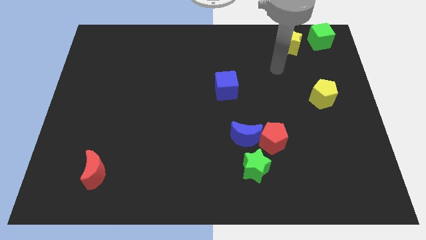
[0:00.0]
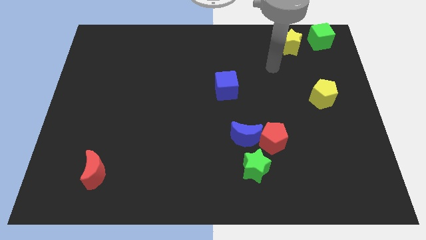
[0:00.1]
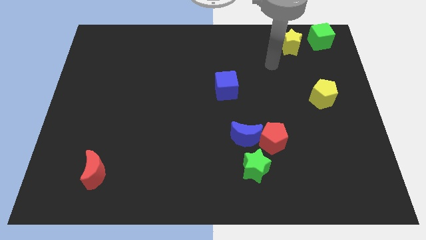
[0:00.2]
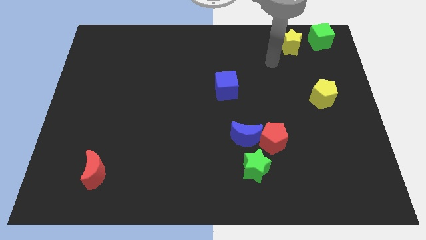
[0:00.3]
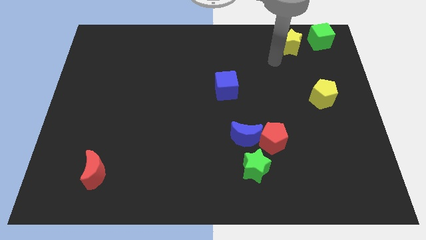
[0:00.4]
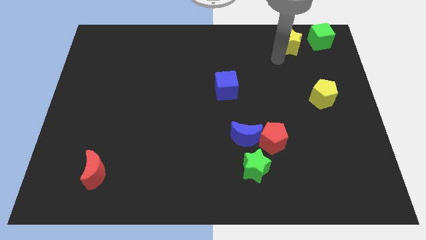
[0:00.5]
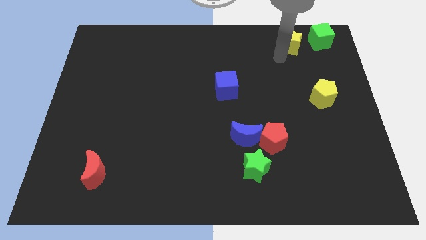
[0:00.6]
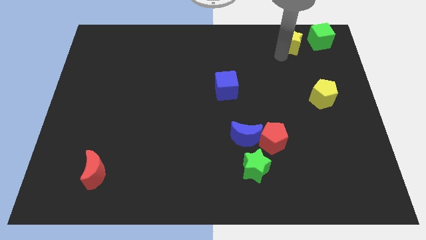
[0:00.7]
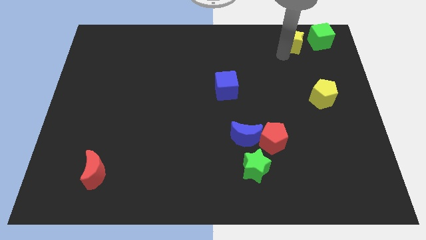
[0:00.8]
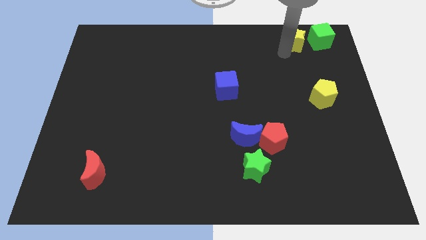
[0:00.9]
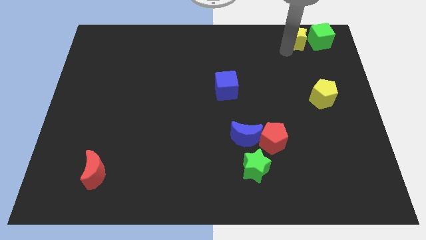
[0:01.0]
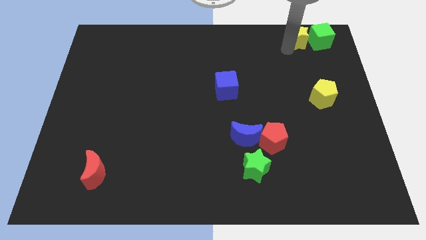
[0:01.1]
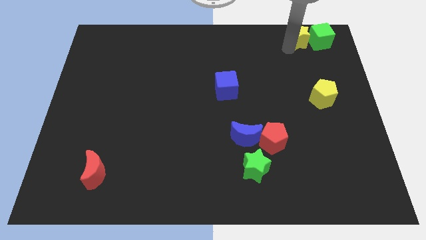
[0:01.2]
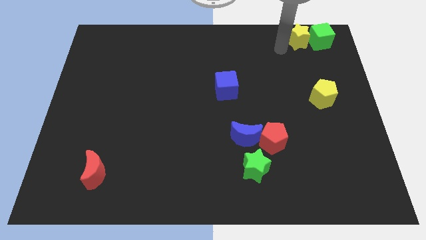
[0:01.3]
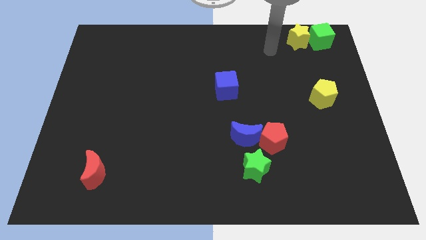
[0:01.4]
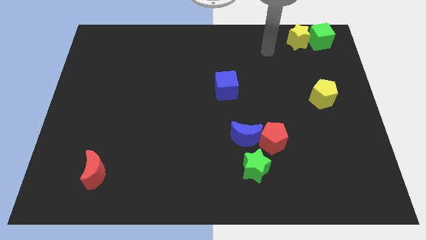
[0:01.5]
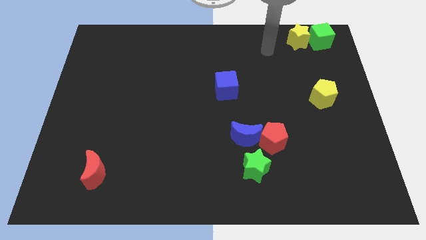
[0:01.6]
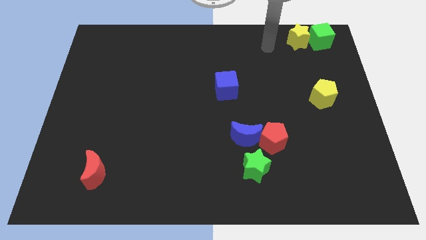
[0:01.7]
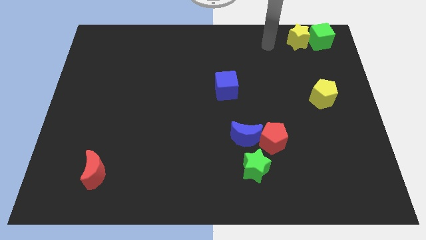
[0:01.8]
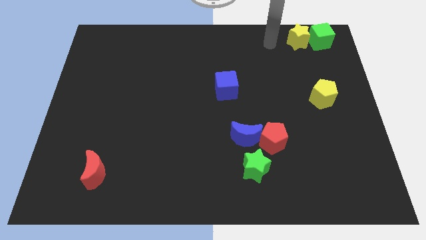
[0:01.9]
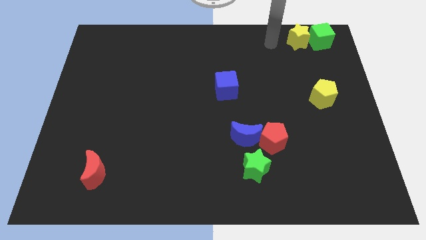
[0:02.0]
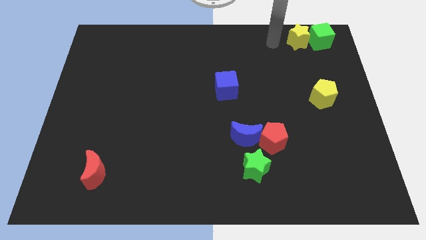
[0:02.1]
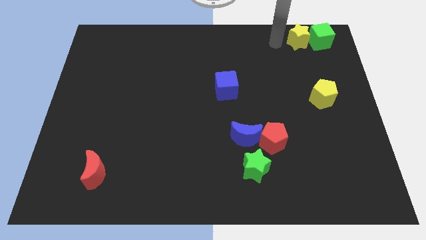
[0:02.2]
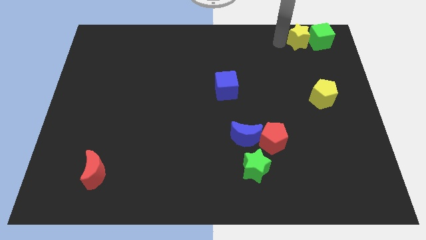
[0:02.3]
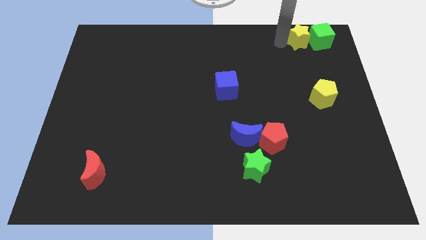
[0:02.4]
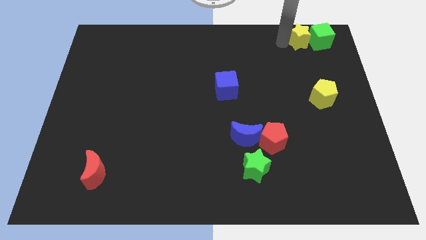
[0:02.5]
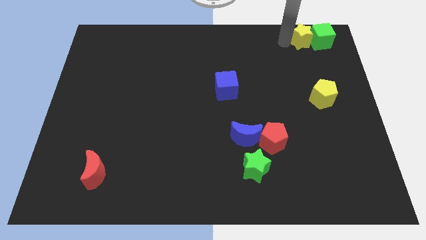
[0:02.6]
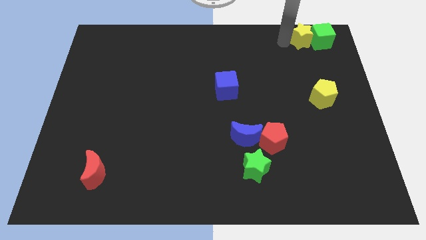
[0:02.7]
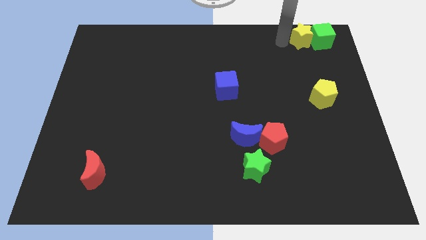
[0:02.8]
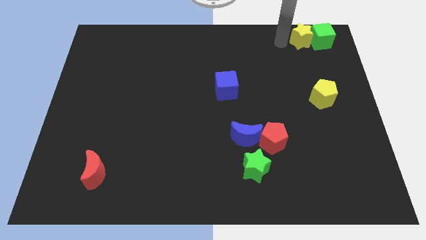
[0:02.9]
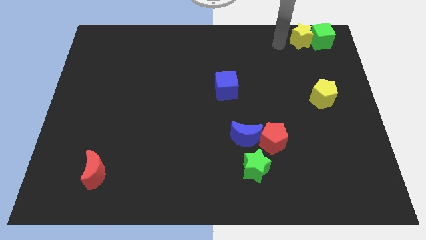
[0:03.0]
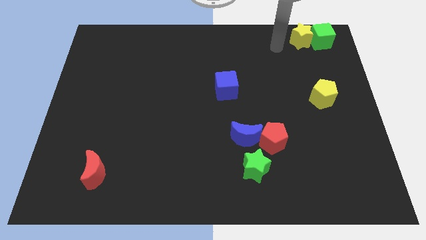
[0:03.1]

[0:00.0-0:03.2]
push yellow star into the green cube

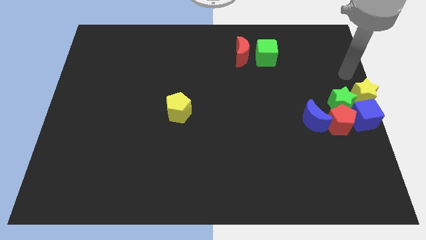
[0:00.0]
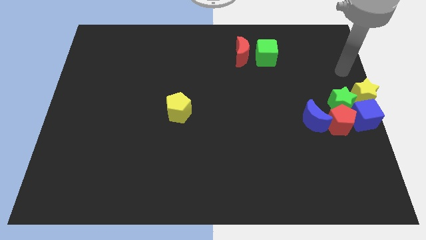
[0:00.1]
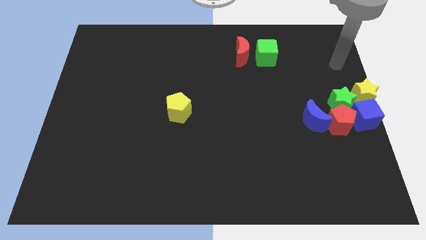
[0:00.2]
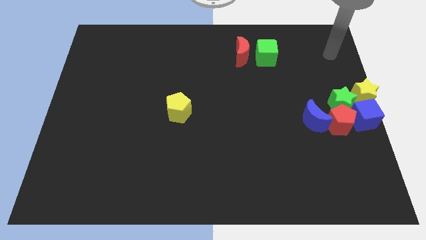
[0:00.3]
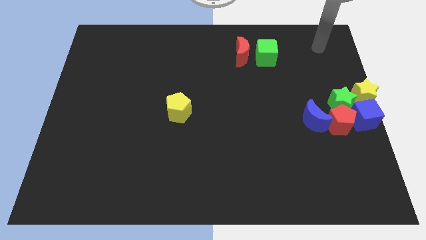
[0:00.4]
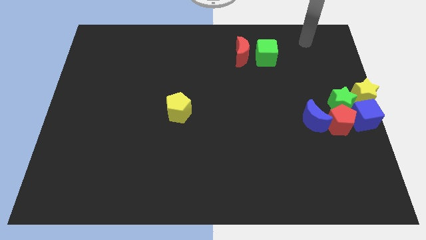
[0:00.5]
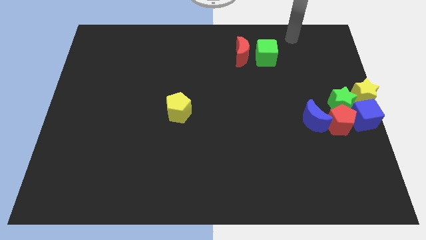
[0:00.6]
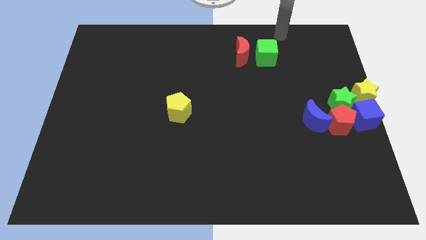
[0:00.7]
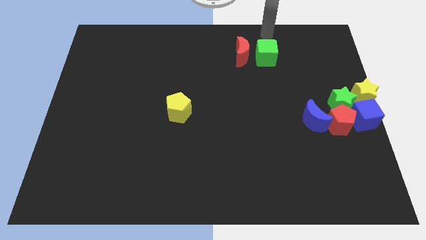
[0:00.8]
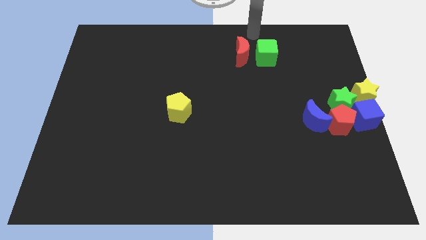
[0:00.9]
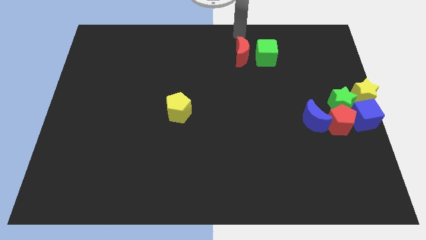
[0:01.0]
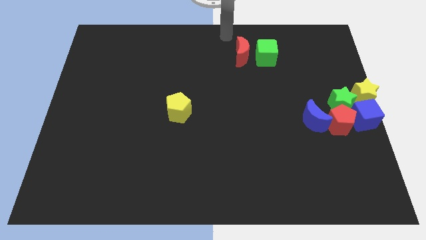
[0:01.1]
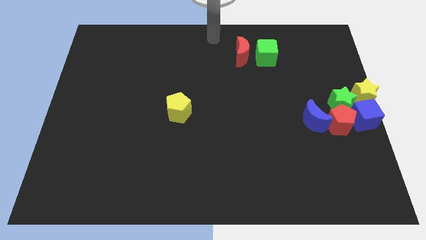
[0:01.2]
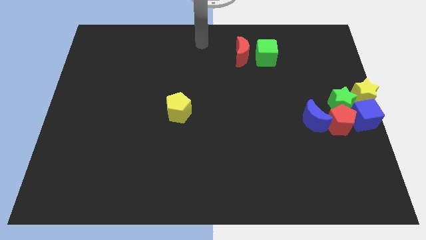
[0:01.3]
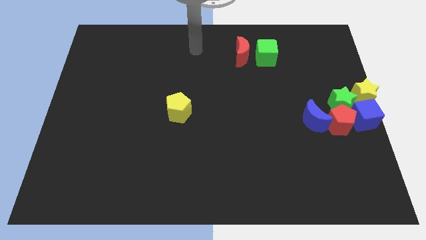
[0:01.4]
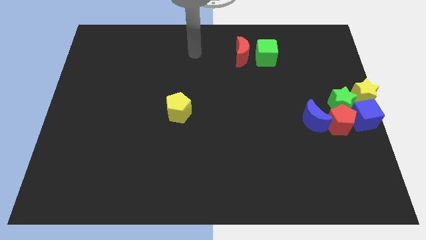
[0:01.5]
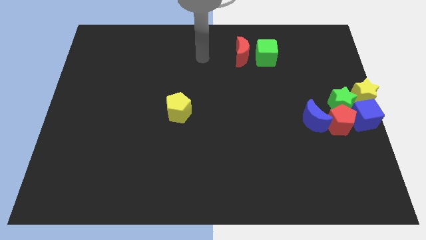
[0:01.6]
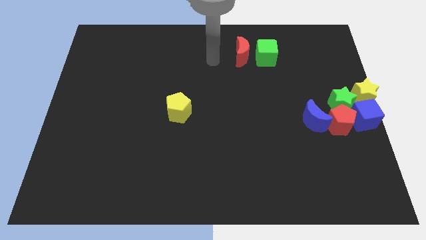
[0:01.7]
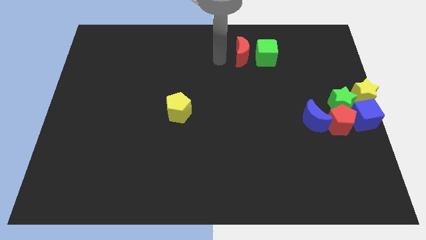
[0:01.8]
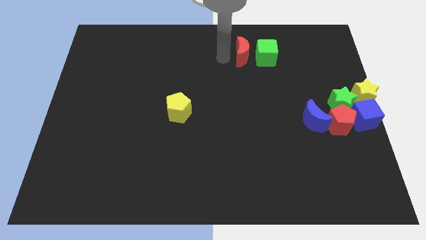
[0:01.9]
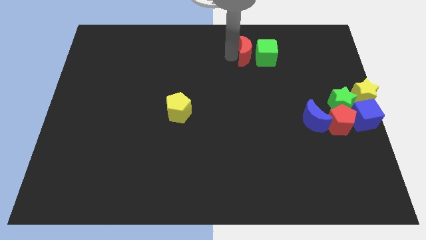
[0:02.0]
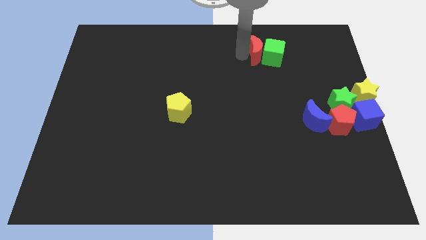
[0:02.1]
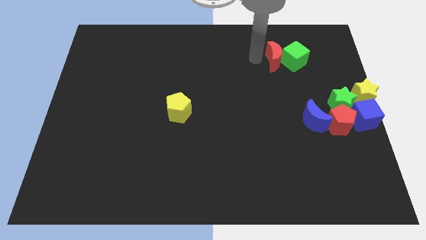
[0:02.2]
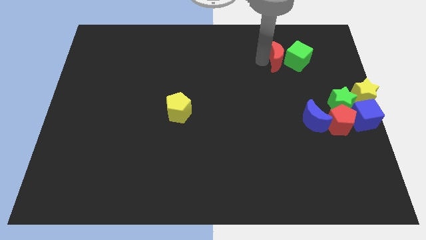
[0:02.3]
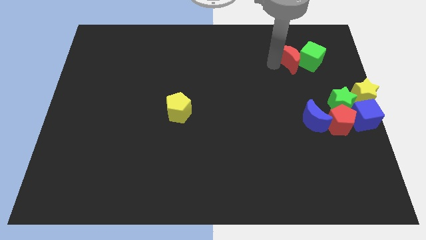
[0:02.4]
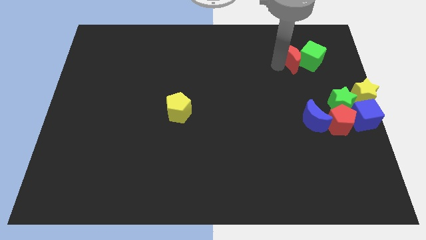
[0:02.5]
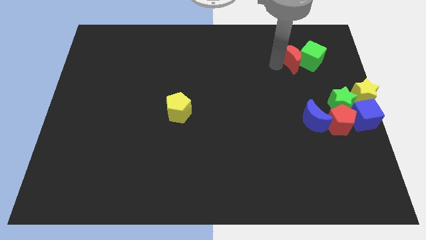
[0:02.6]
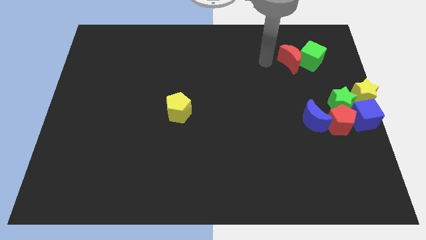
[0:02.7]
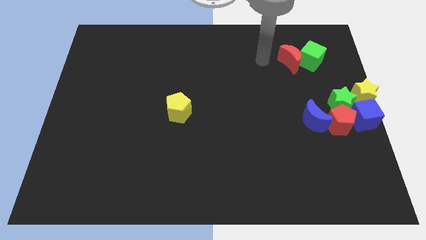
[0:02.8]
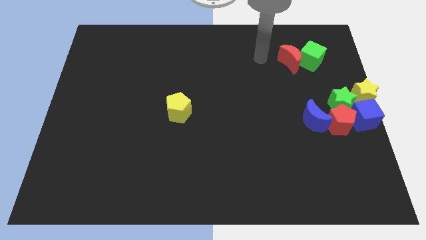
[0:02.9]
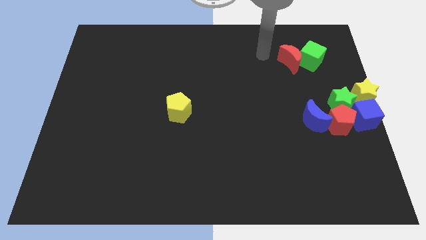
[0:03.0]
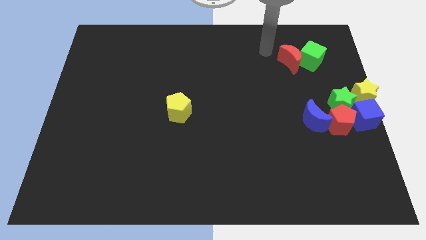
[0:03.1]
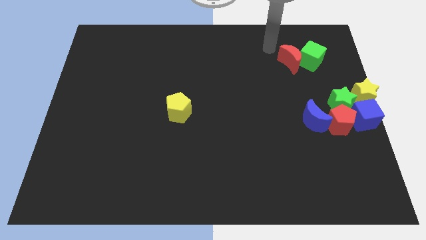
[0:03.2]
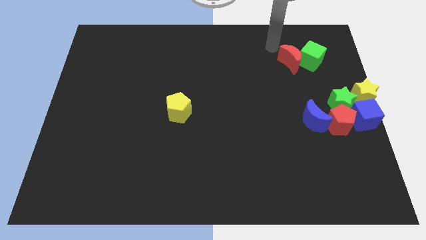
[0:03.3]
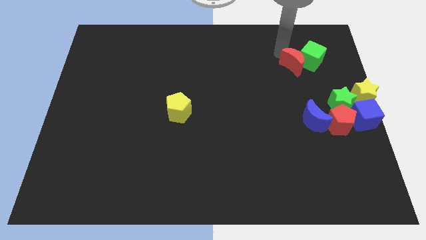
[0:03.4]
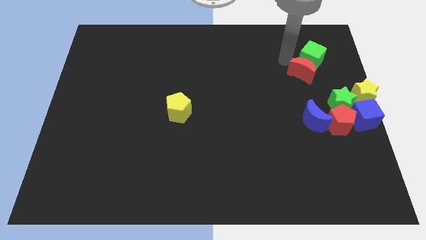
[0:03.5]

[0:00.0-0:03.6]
push red moon in to green cube

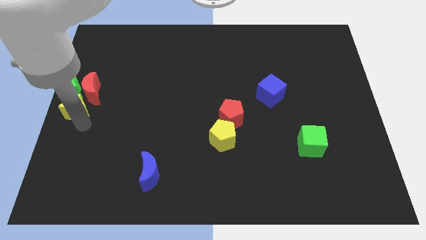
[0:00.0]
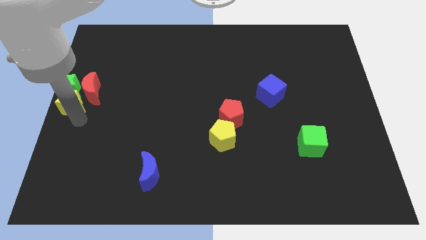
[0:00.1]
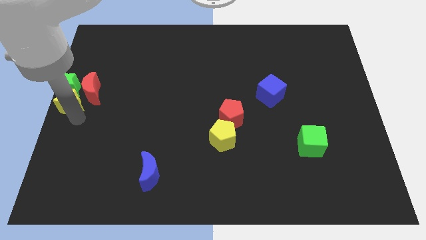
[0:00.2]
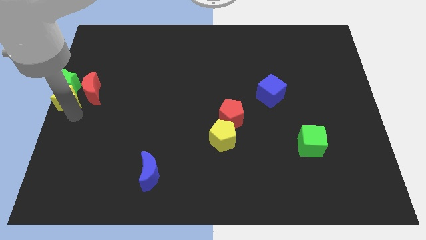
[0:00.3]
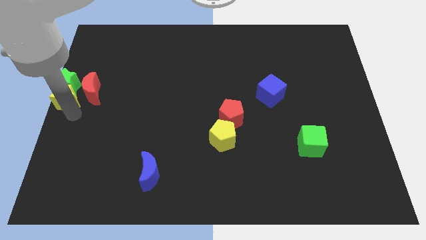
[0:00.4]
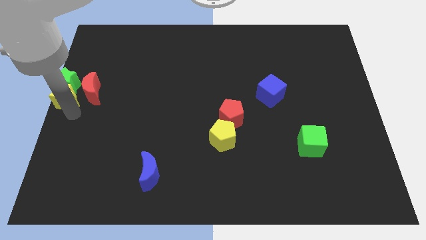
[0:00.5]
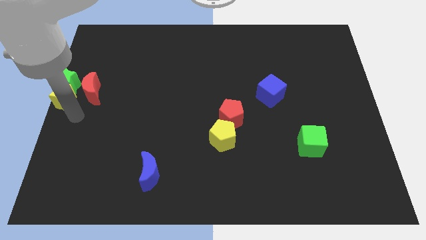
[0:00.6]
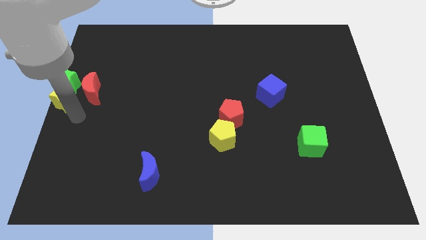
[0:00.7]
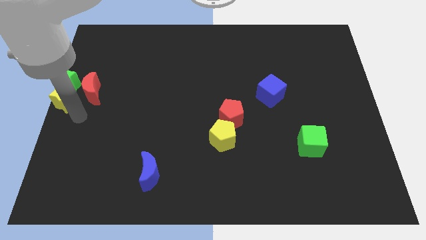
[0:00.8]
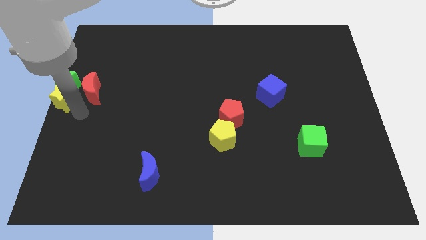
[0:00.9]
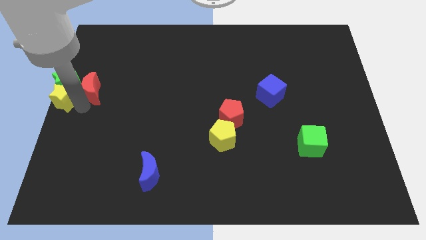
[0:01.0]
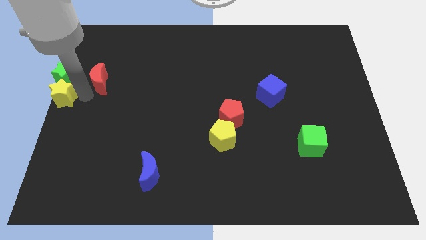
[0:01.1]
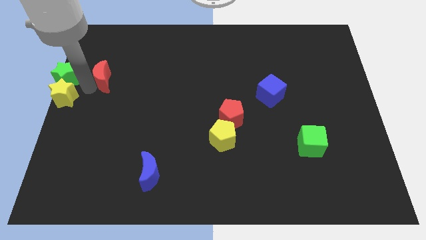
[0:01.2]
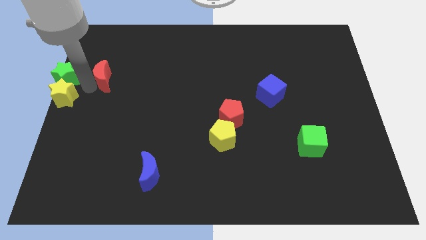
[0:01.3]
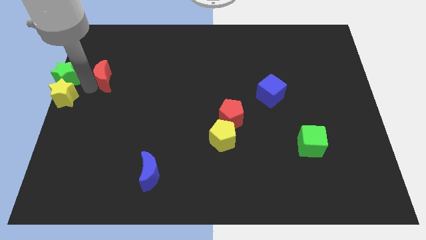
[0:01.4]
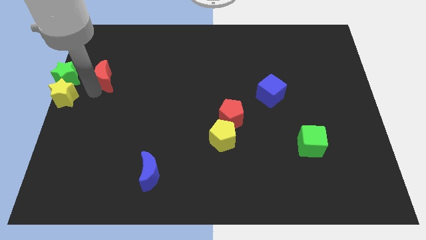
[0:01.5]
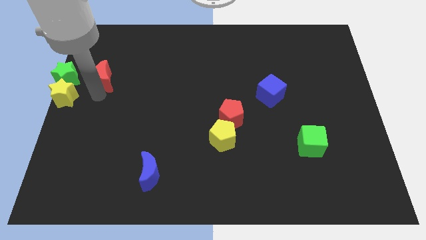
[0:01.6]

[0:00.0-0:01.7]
separate the red moon from the green star

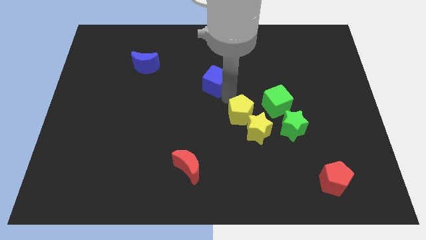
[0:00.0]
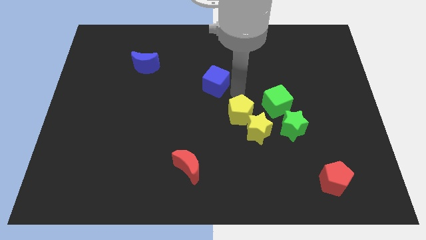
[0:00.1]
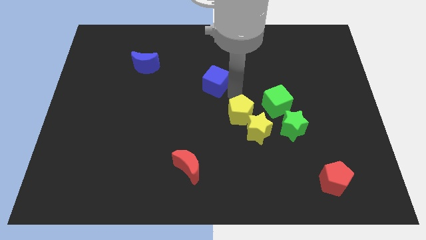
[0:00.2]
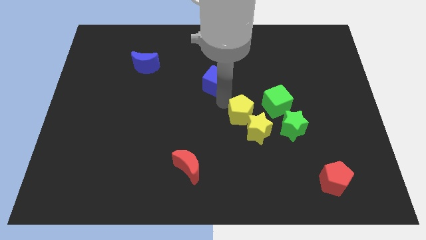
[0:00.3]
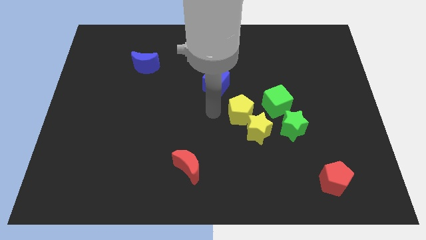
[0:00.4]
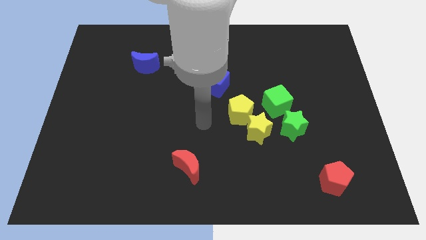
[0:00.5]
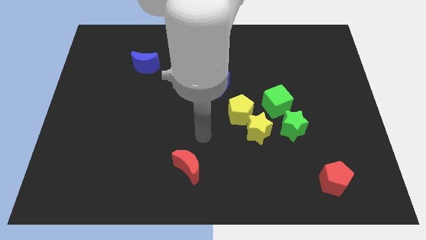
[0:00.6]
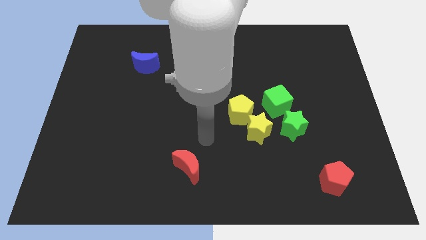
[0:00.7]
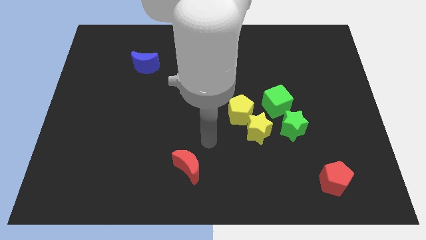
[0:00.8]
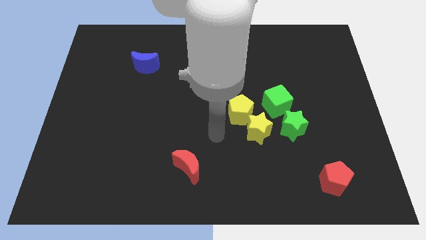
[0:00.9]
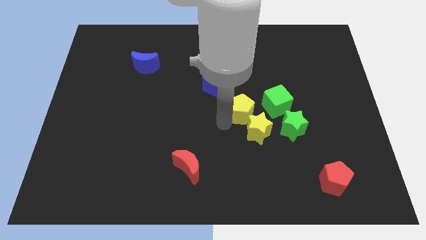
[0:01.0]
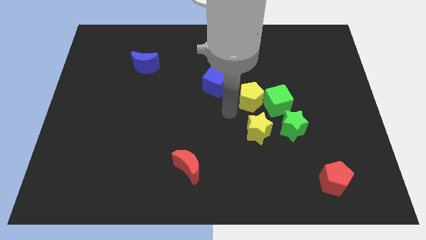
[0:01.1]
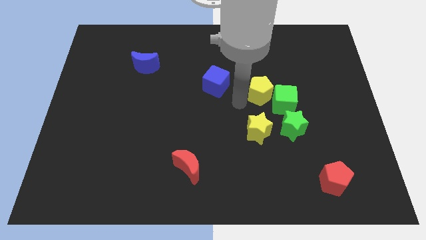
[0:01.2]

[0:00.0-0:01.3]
move the yellow pentagon into the left side of the green cube
